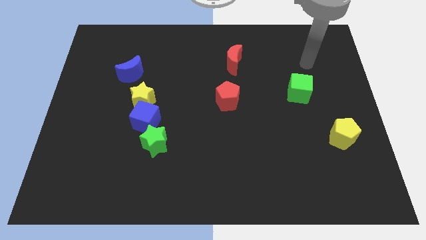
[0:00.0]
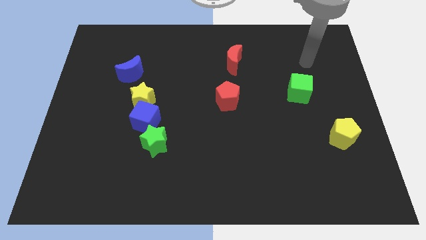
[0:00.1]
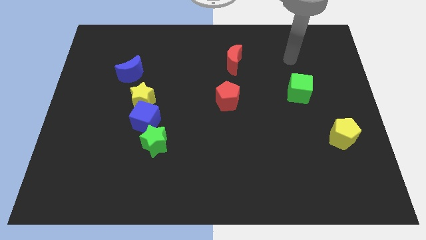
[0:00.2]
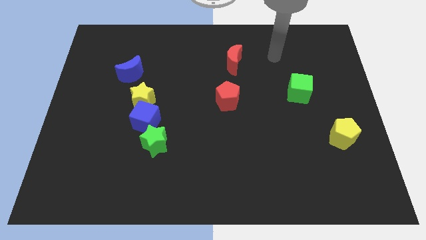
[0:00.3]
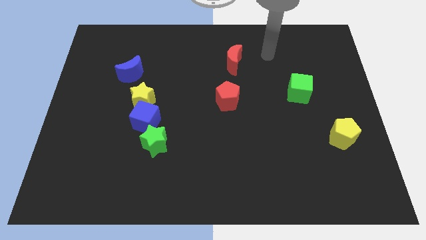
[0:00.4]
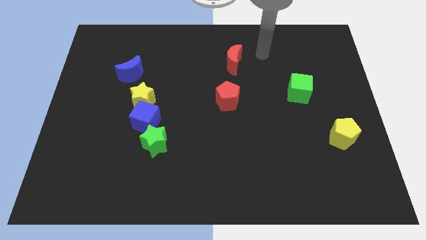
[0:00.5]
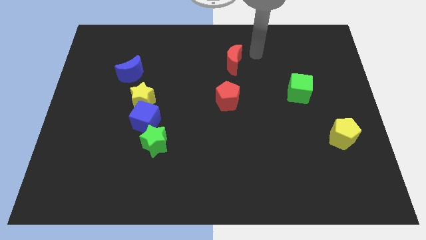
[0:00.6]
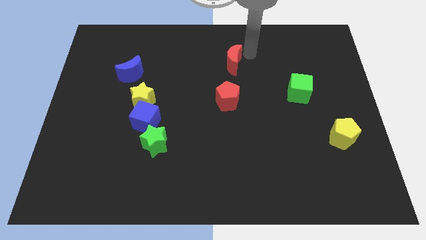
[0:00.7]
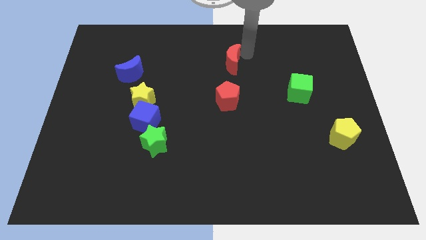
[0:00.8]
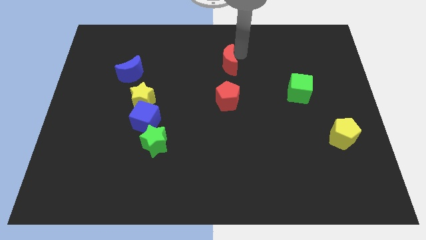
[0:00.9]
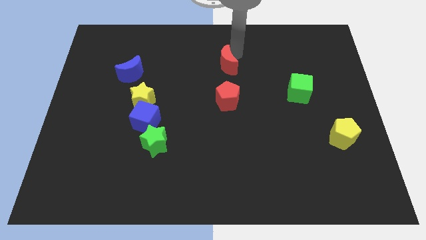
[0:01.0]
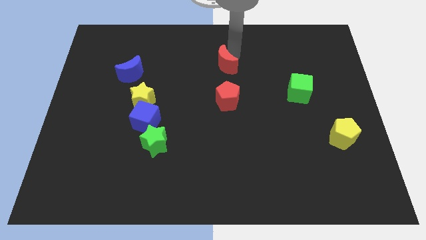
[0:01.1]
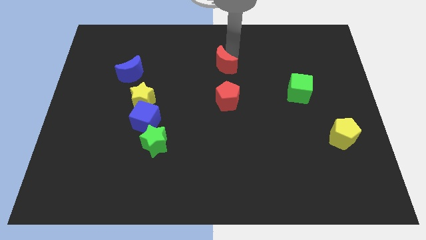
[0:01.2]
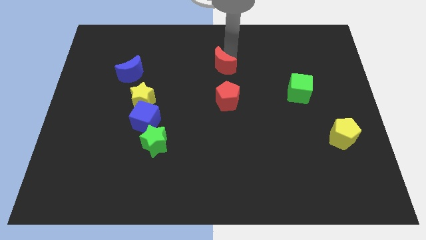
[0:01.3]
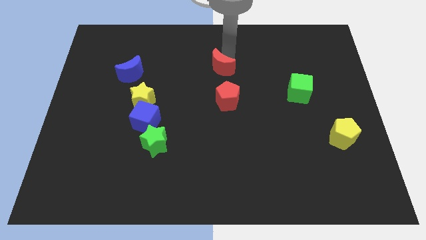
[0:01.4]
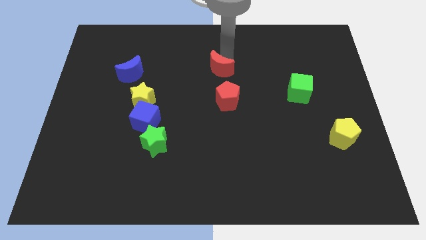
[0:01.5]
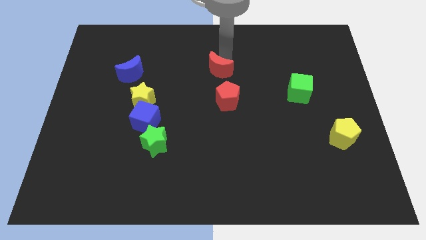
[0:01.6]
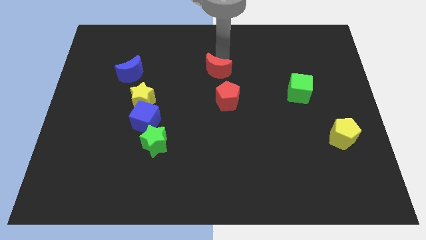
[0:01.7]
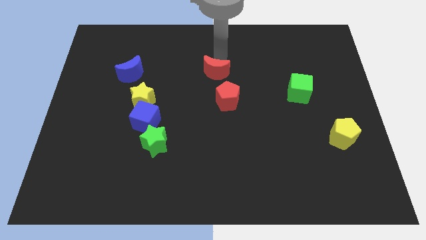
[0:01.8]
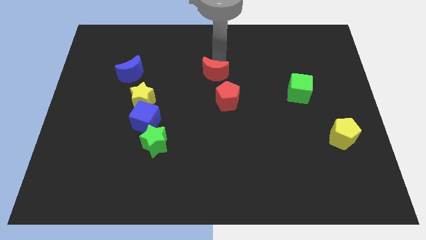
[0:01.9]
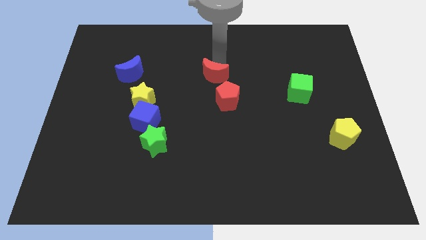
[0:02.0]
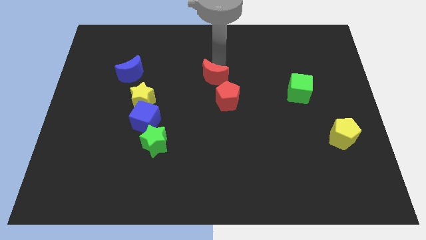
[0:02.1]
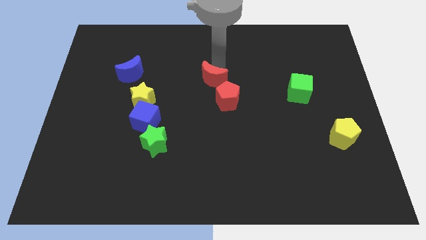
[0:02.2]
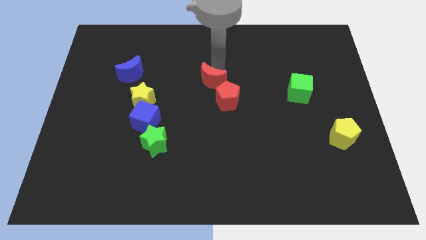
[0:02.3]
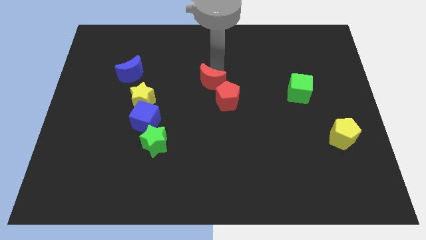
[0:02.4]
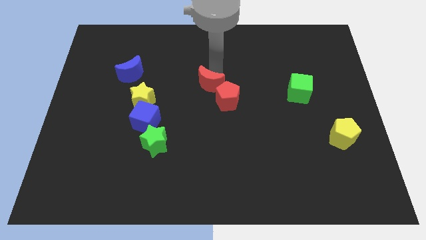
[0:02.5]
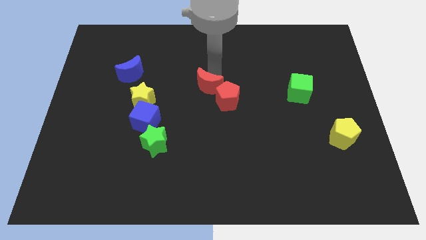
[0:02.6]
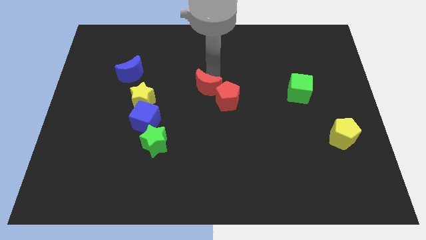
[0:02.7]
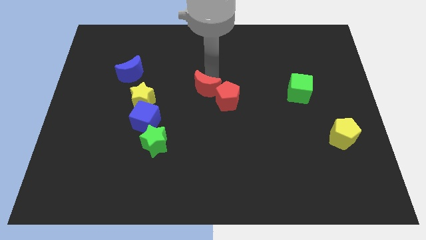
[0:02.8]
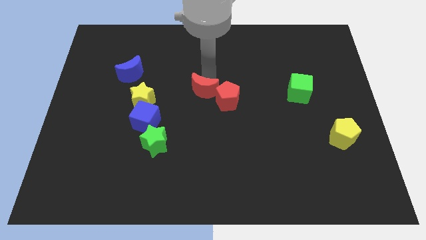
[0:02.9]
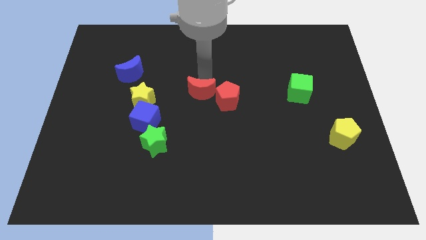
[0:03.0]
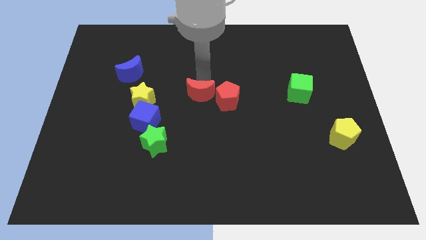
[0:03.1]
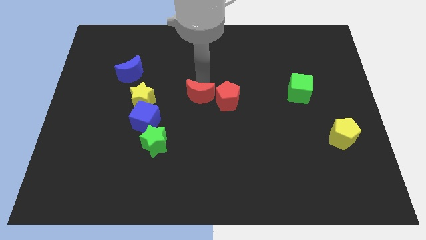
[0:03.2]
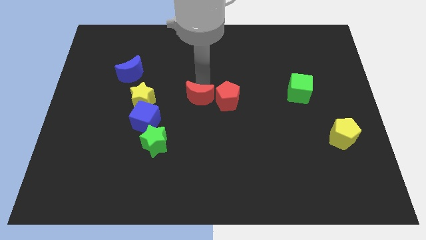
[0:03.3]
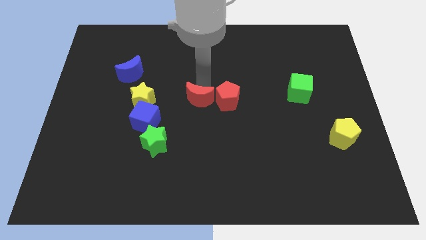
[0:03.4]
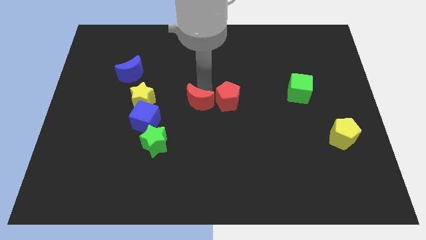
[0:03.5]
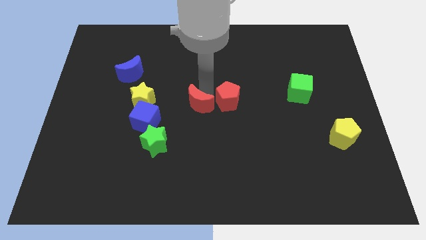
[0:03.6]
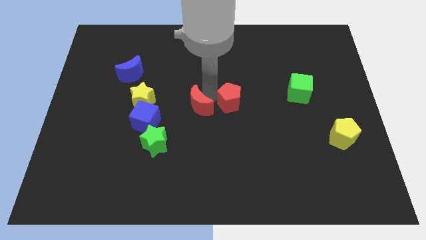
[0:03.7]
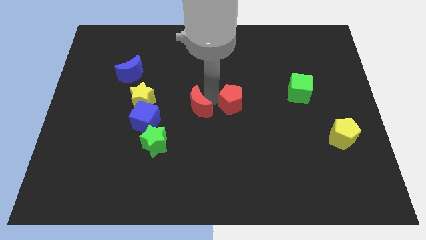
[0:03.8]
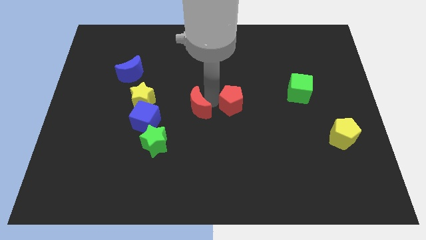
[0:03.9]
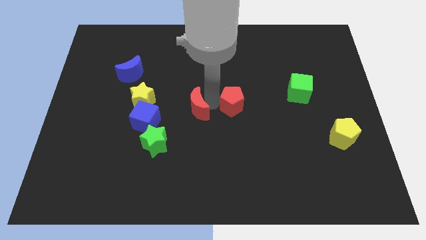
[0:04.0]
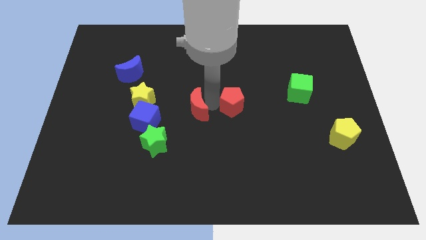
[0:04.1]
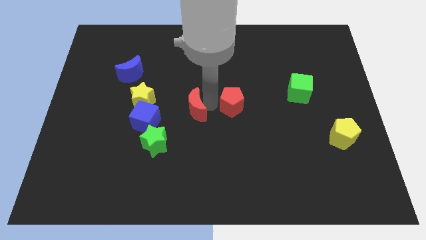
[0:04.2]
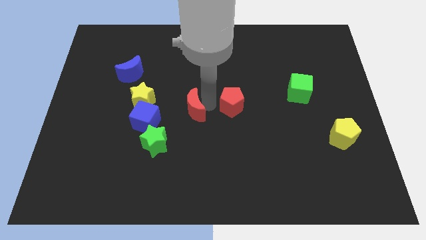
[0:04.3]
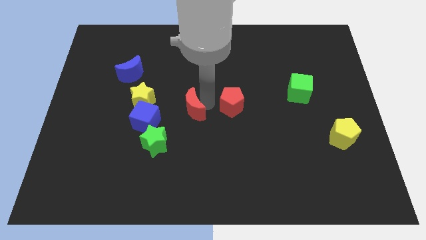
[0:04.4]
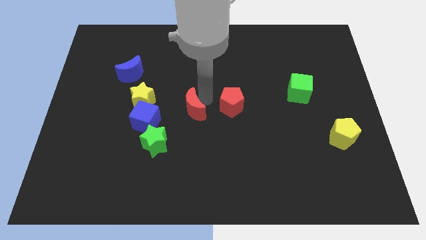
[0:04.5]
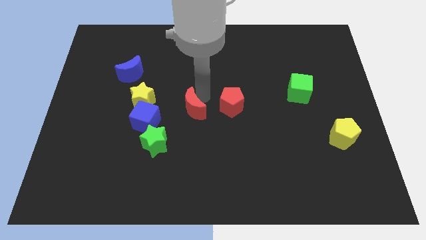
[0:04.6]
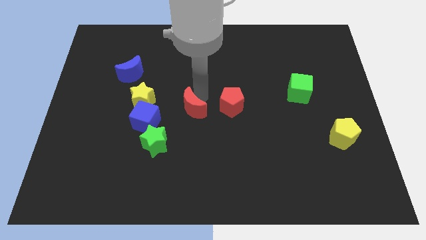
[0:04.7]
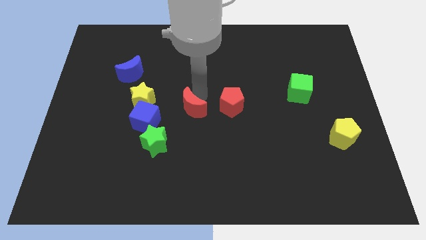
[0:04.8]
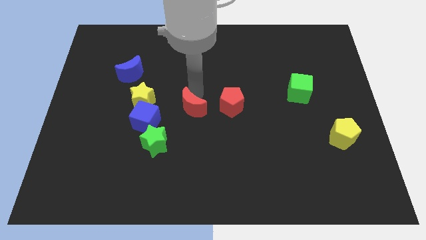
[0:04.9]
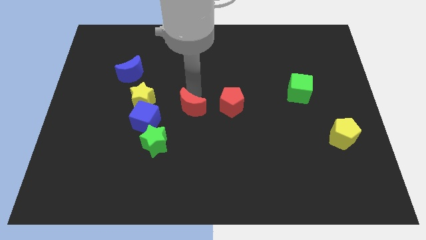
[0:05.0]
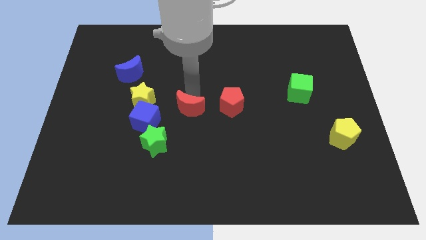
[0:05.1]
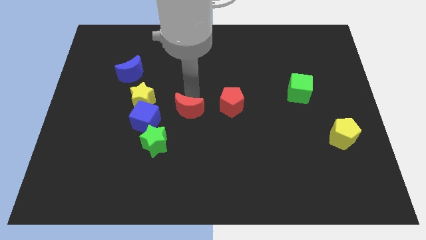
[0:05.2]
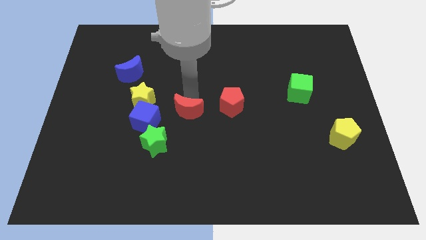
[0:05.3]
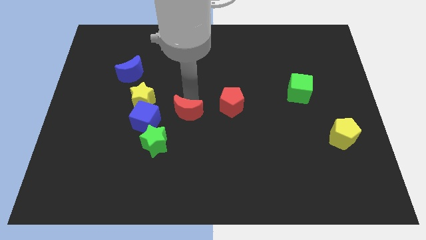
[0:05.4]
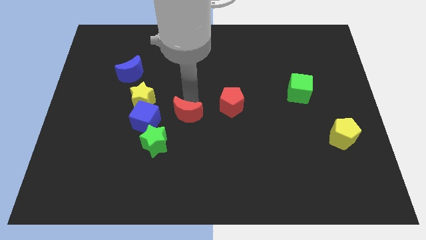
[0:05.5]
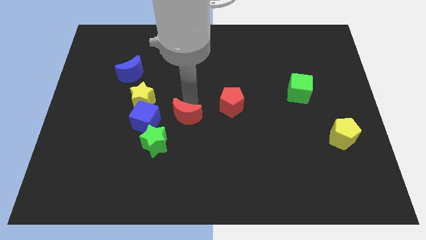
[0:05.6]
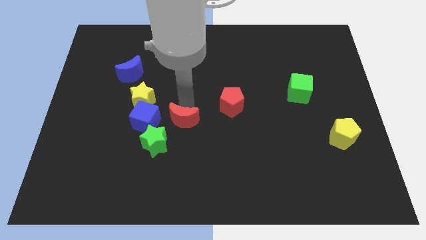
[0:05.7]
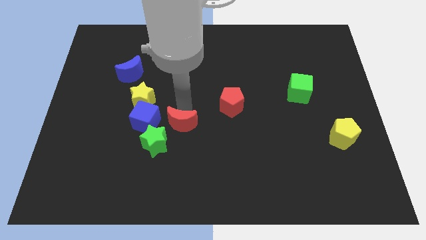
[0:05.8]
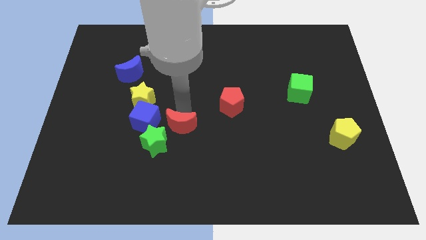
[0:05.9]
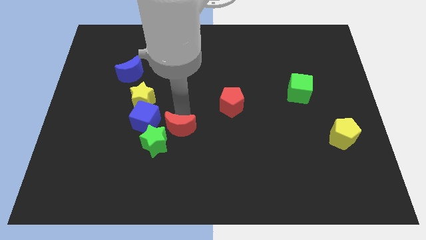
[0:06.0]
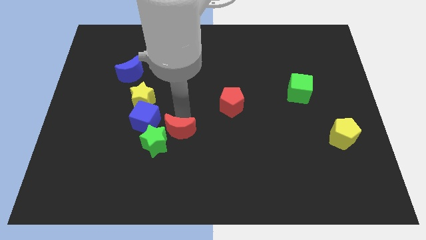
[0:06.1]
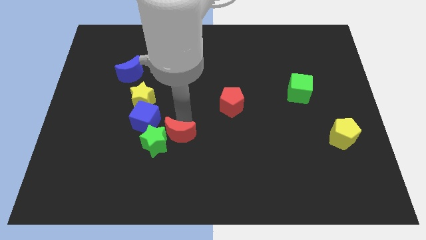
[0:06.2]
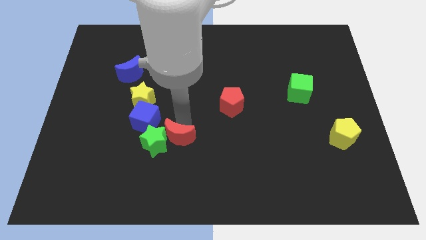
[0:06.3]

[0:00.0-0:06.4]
put the red moon close to the green star

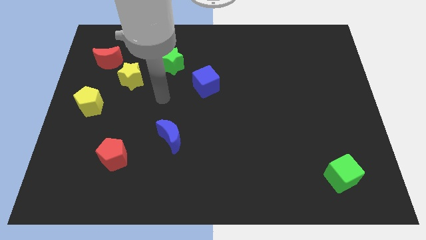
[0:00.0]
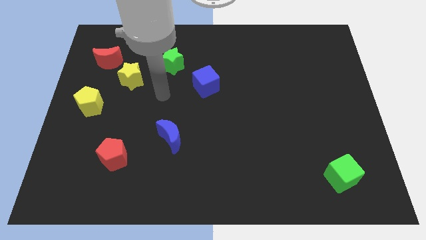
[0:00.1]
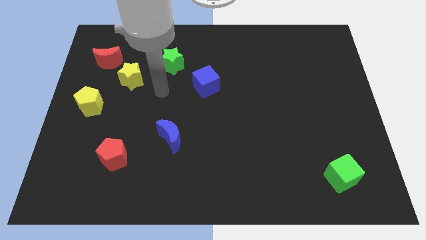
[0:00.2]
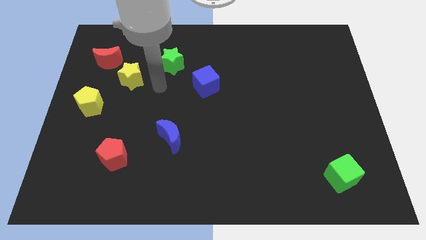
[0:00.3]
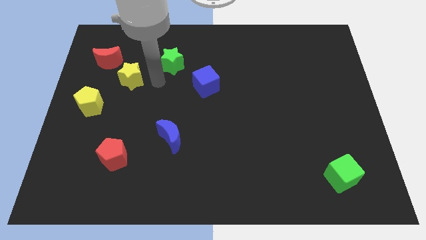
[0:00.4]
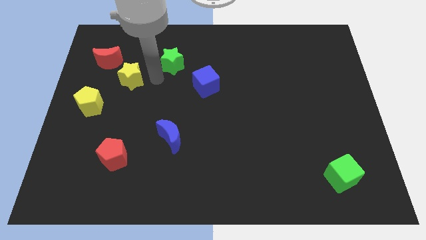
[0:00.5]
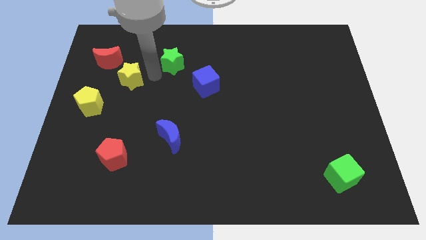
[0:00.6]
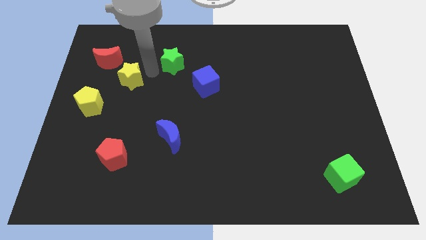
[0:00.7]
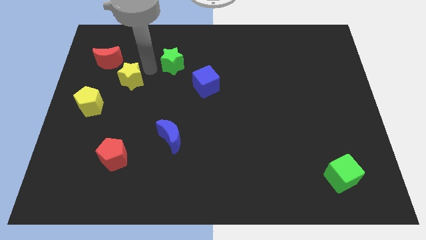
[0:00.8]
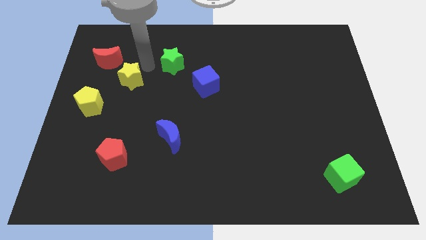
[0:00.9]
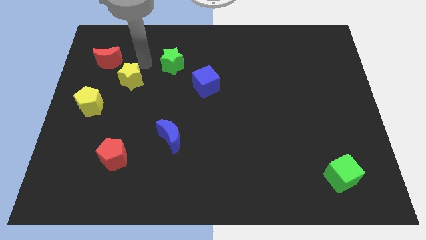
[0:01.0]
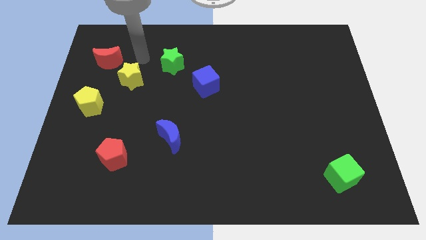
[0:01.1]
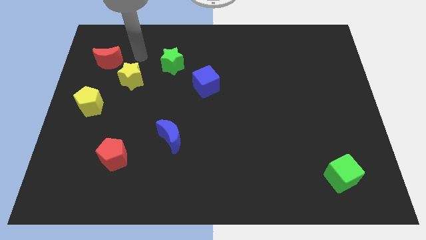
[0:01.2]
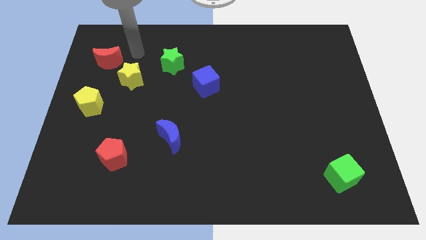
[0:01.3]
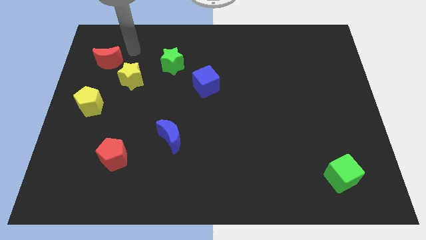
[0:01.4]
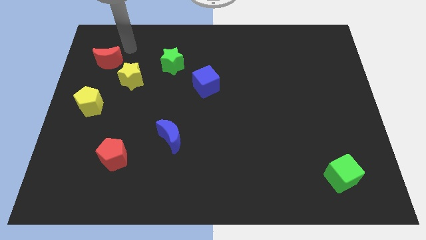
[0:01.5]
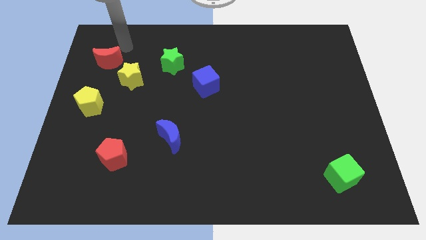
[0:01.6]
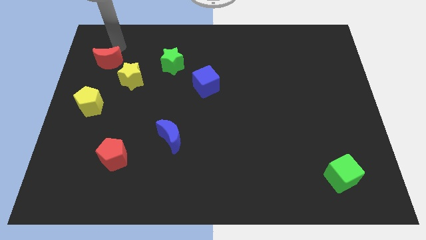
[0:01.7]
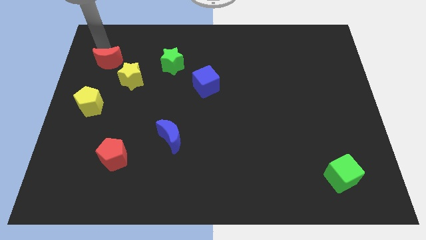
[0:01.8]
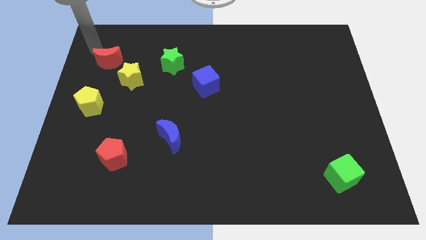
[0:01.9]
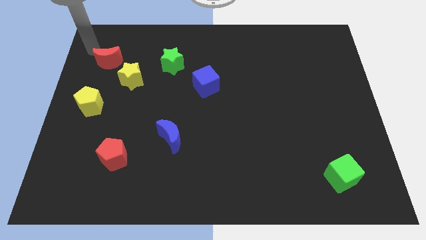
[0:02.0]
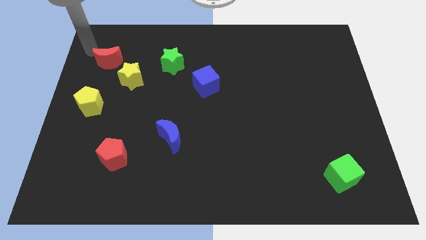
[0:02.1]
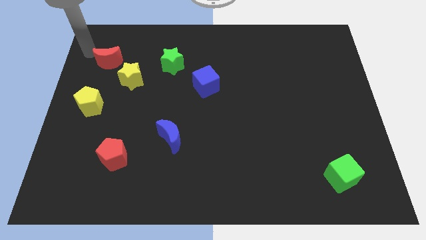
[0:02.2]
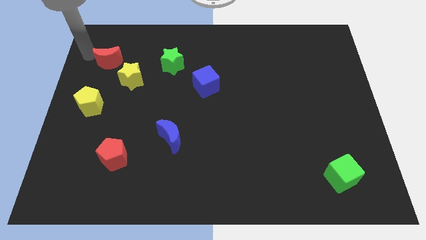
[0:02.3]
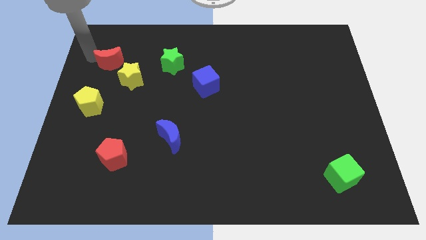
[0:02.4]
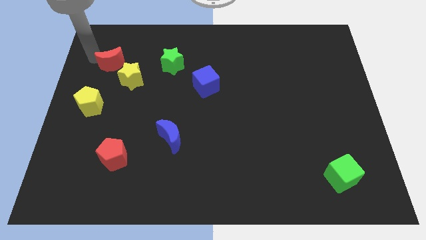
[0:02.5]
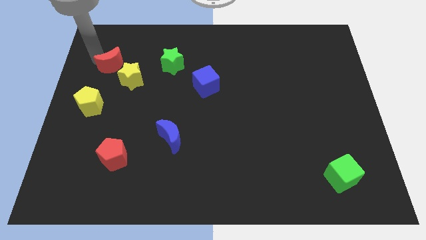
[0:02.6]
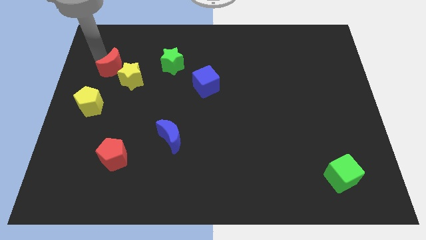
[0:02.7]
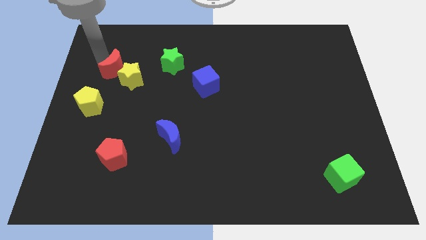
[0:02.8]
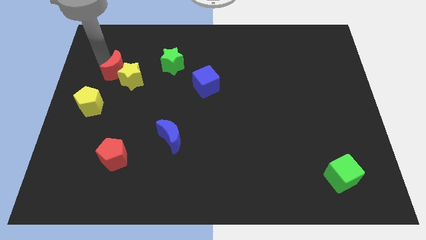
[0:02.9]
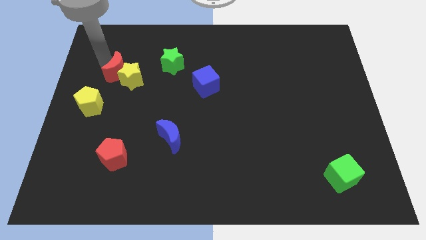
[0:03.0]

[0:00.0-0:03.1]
move the red moon to the yellow star
